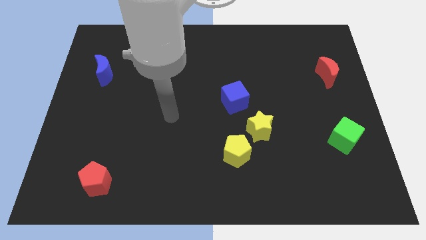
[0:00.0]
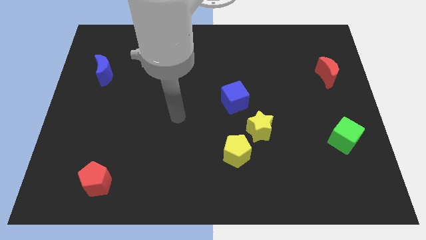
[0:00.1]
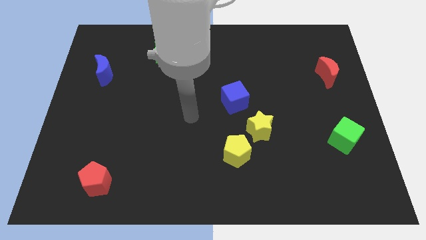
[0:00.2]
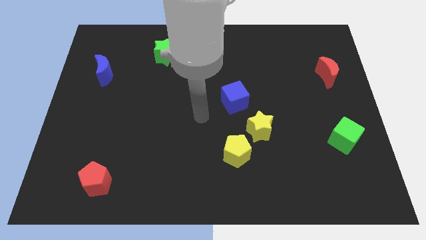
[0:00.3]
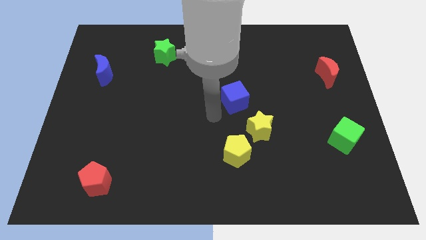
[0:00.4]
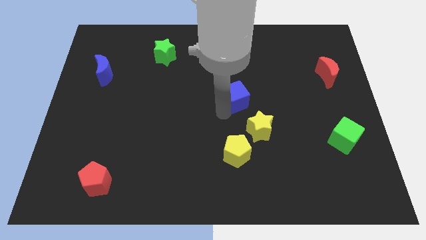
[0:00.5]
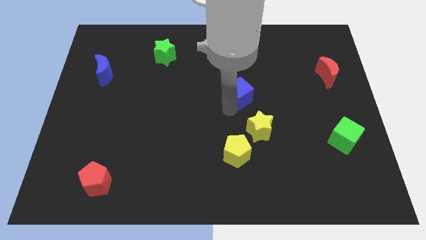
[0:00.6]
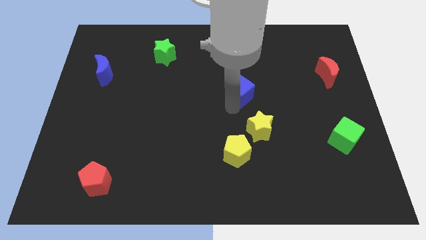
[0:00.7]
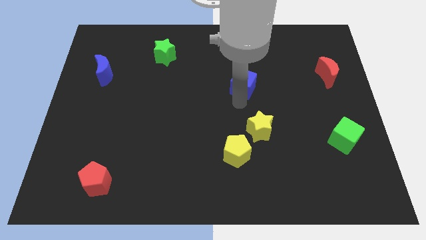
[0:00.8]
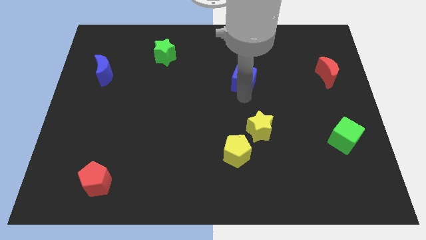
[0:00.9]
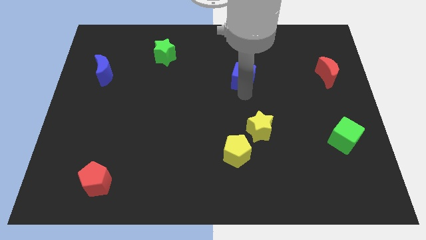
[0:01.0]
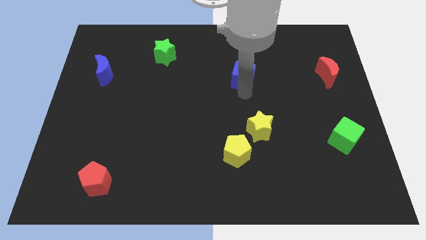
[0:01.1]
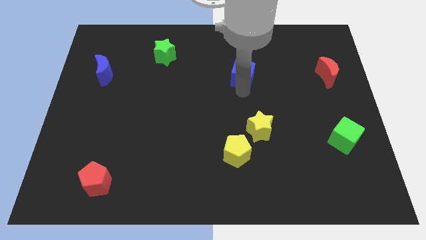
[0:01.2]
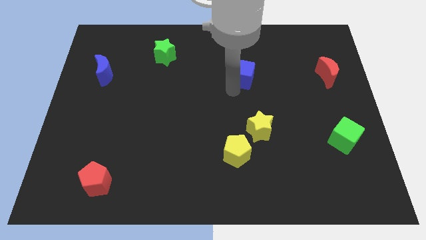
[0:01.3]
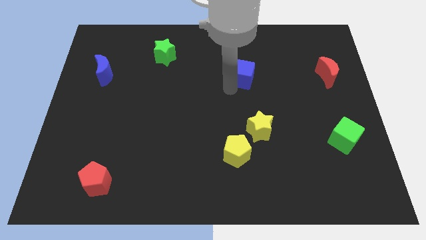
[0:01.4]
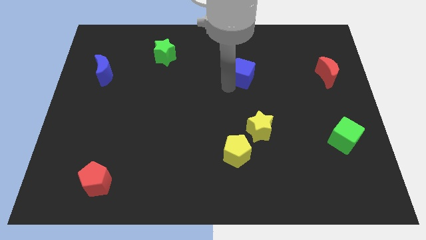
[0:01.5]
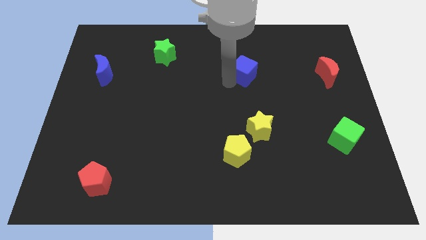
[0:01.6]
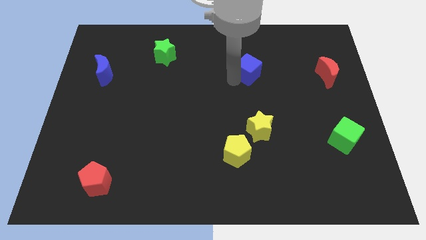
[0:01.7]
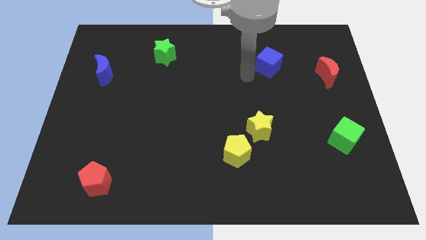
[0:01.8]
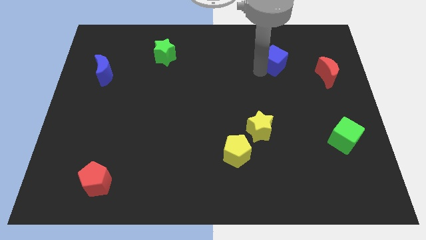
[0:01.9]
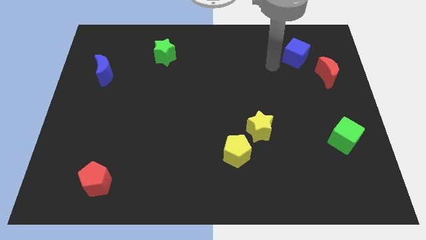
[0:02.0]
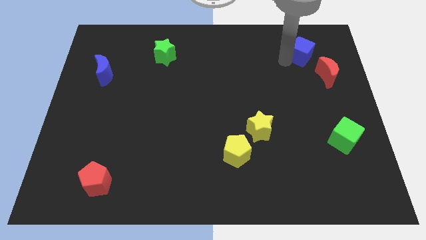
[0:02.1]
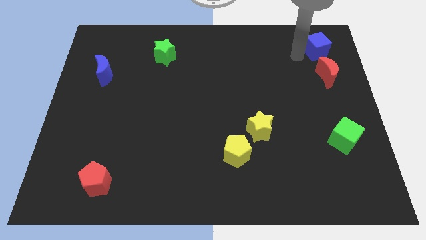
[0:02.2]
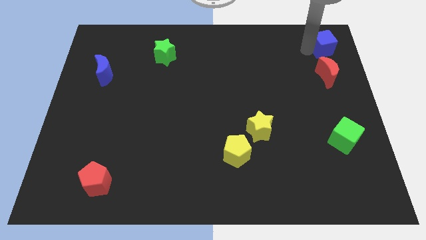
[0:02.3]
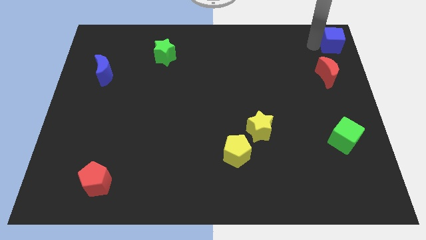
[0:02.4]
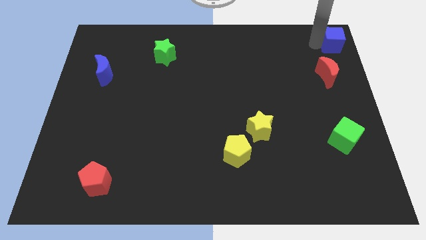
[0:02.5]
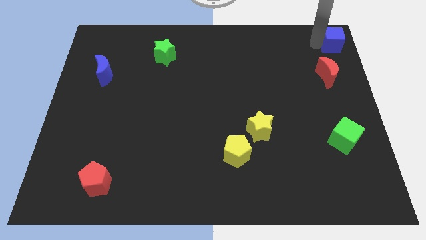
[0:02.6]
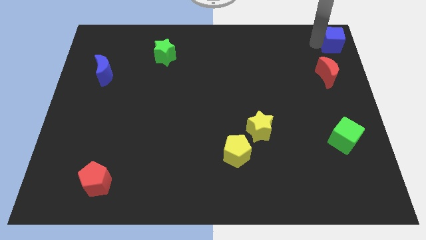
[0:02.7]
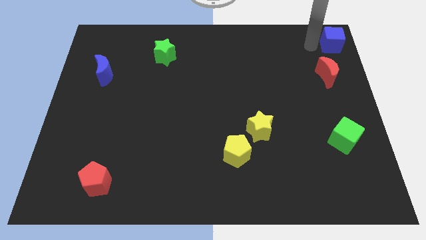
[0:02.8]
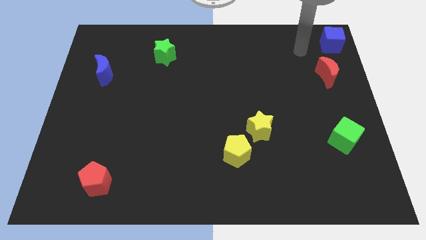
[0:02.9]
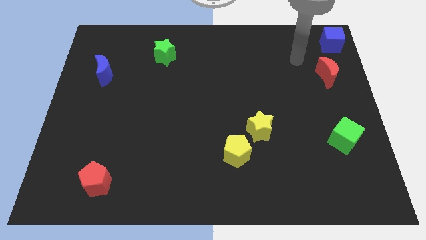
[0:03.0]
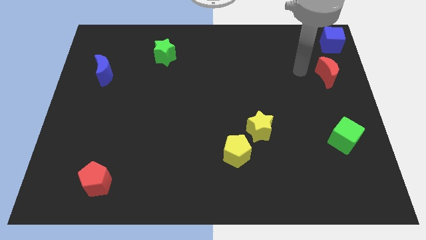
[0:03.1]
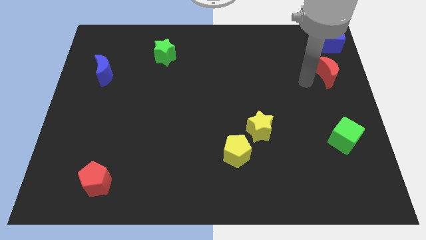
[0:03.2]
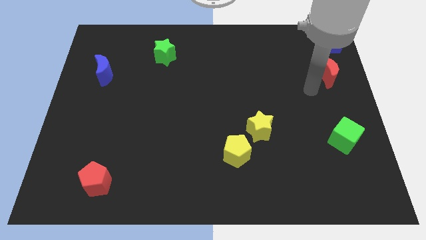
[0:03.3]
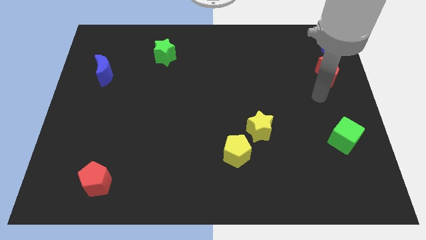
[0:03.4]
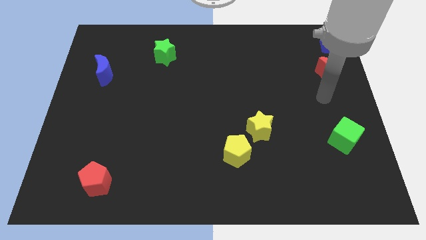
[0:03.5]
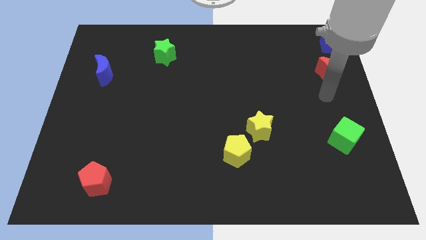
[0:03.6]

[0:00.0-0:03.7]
drag the blue cube to the top right

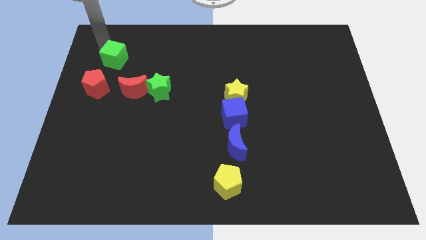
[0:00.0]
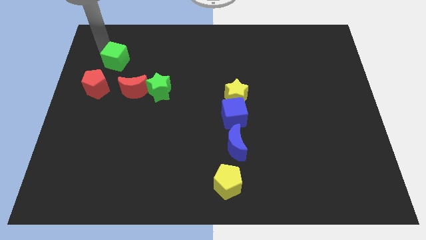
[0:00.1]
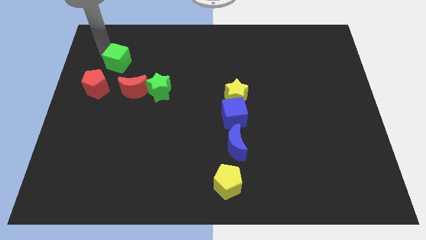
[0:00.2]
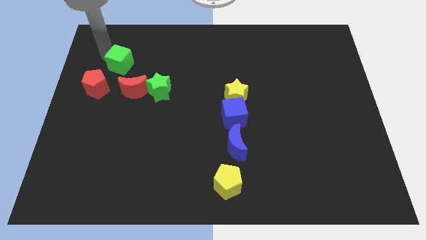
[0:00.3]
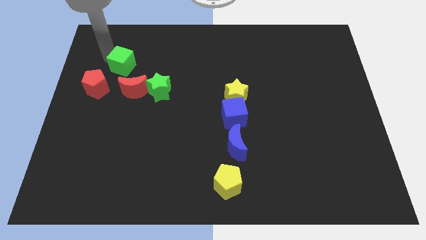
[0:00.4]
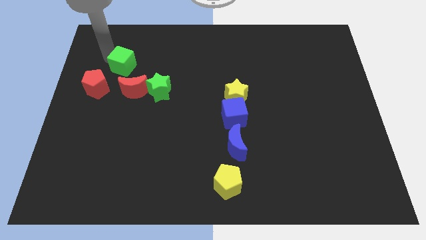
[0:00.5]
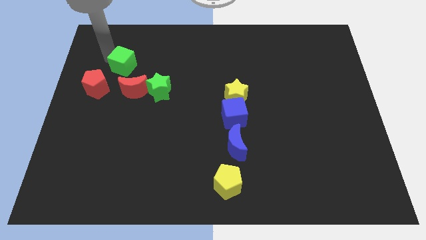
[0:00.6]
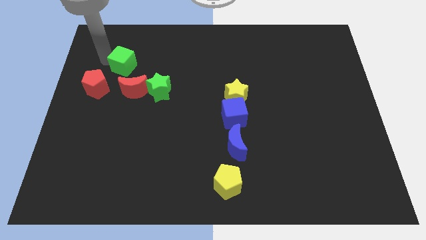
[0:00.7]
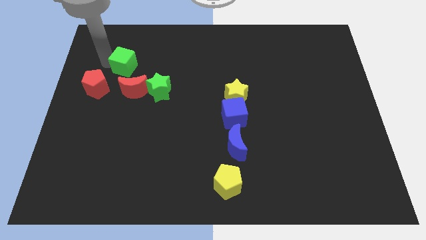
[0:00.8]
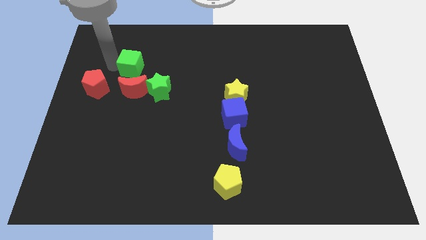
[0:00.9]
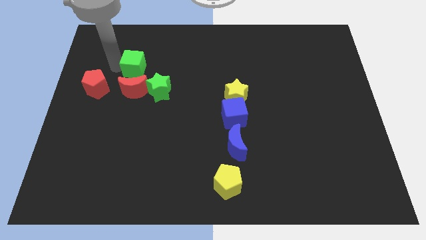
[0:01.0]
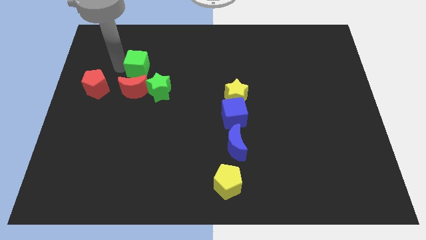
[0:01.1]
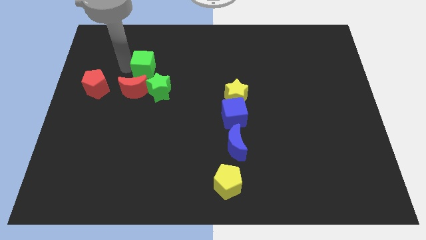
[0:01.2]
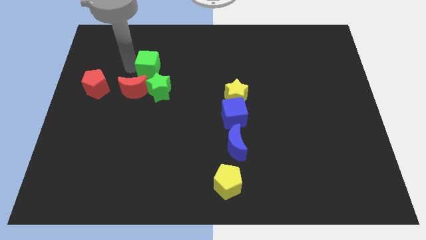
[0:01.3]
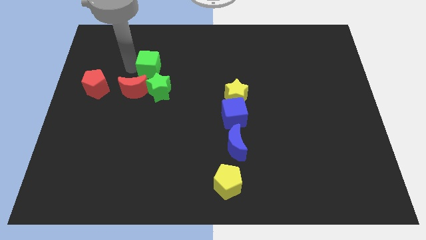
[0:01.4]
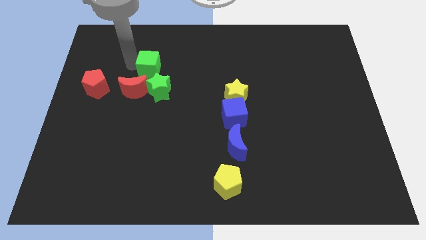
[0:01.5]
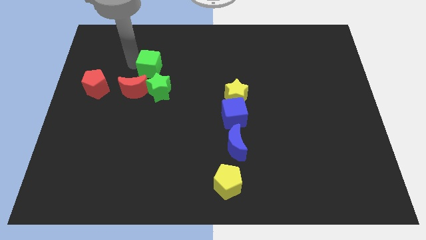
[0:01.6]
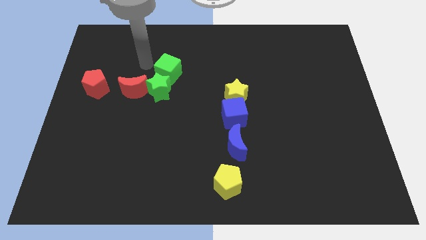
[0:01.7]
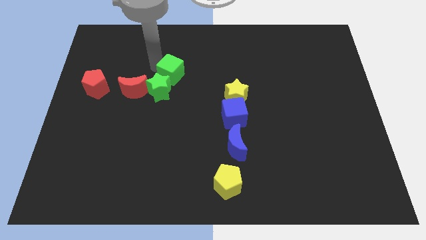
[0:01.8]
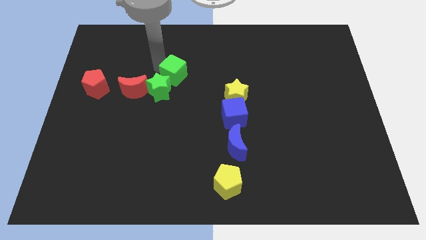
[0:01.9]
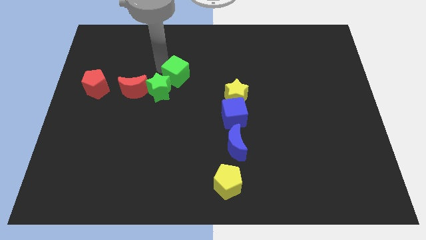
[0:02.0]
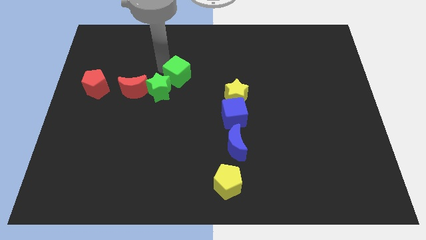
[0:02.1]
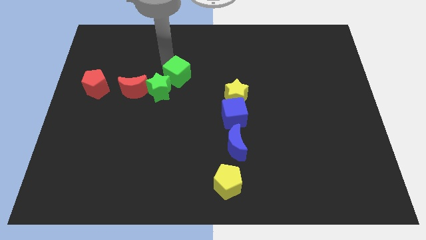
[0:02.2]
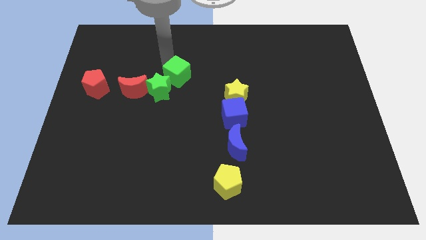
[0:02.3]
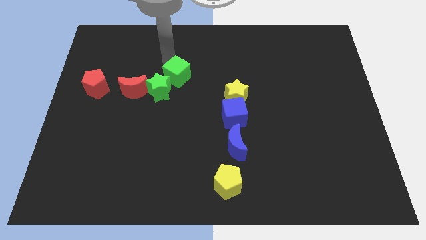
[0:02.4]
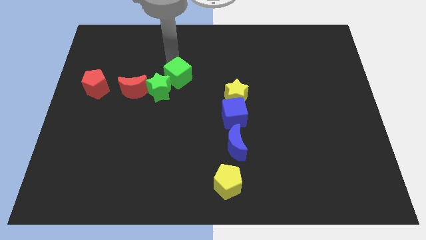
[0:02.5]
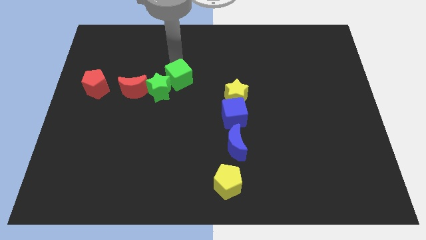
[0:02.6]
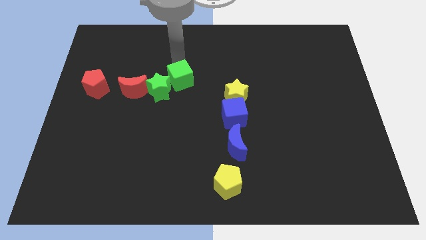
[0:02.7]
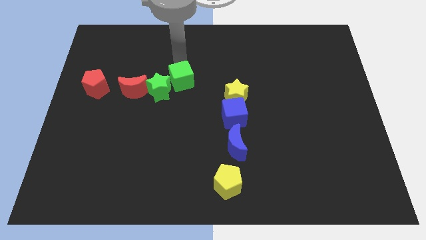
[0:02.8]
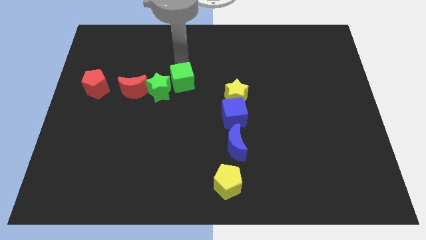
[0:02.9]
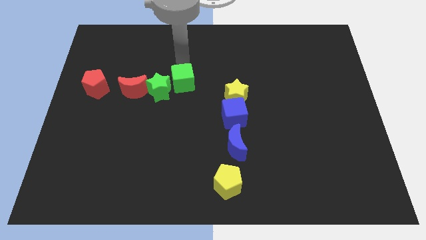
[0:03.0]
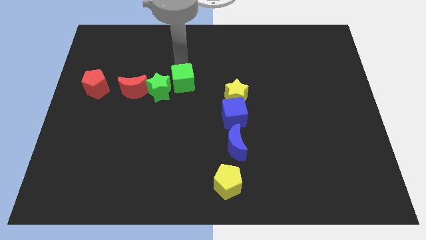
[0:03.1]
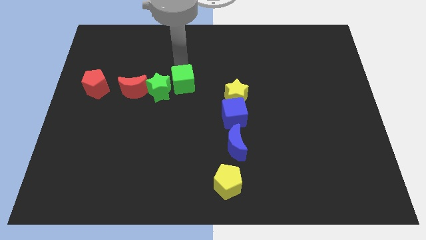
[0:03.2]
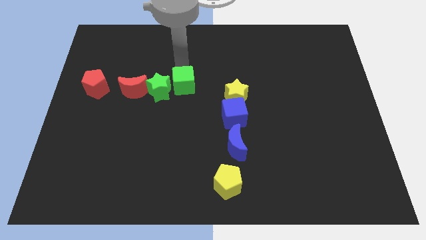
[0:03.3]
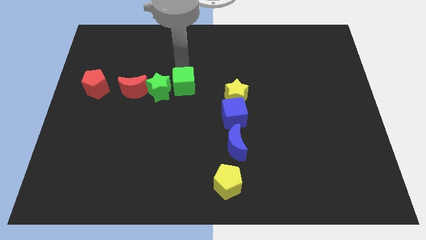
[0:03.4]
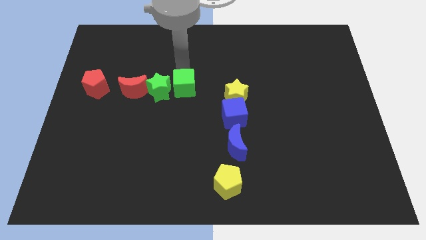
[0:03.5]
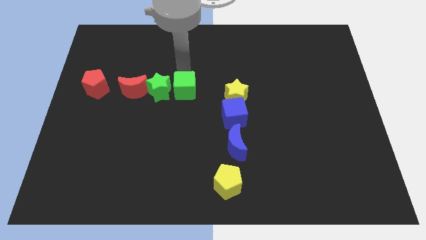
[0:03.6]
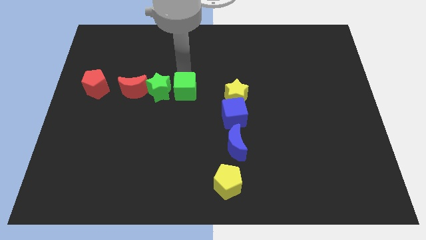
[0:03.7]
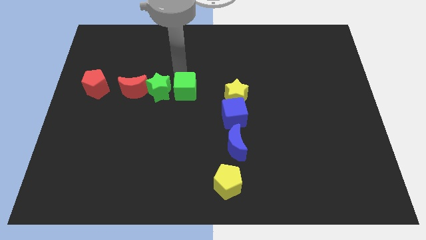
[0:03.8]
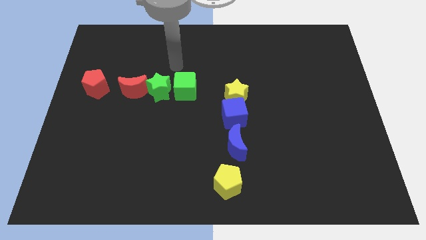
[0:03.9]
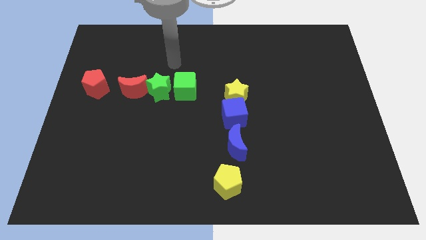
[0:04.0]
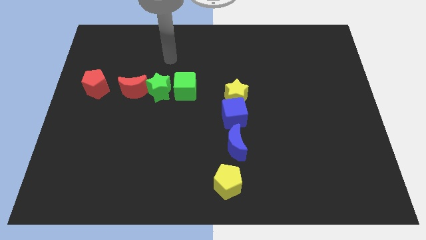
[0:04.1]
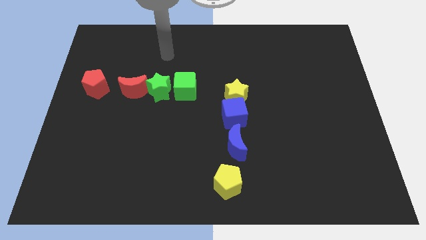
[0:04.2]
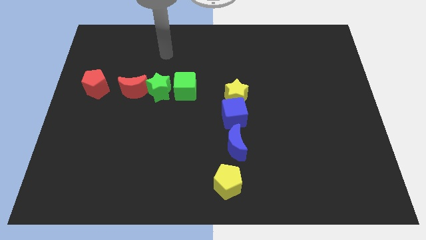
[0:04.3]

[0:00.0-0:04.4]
place the green cube right to the green star

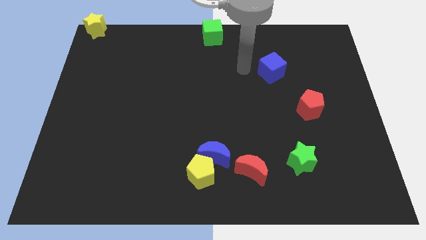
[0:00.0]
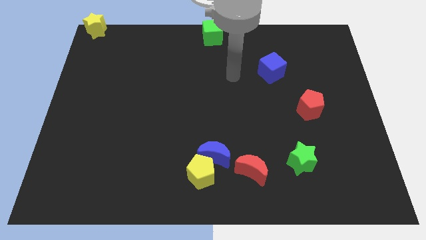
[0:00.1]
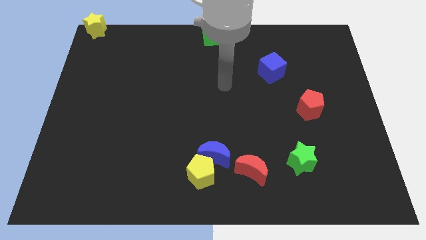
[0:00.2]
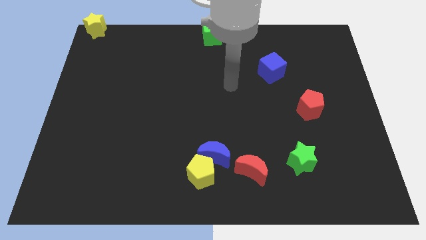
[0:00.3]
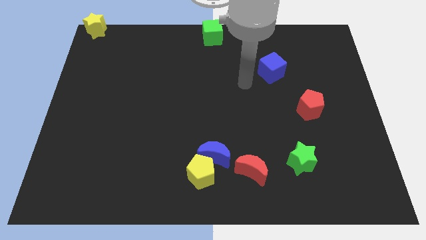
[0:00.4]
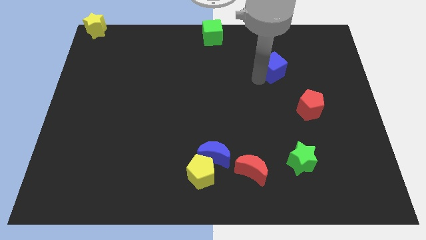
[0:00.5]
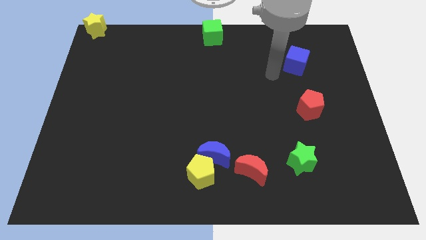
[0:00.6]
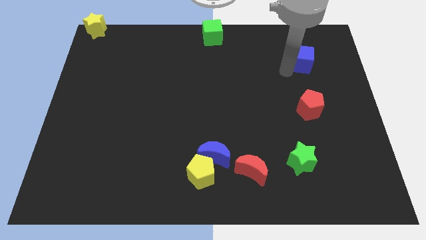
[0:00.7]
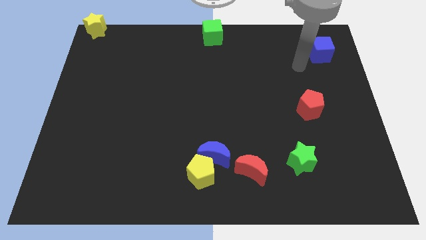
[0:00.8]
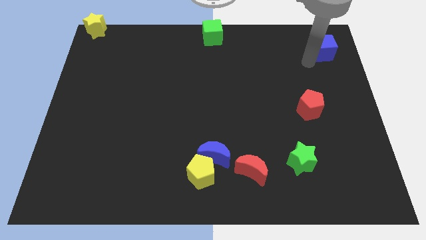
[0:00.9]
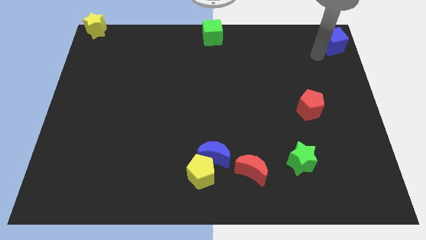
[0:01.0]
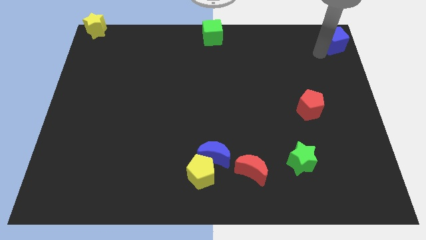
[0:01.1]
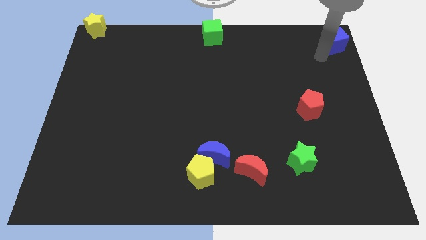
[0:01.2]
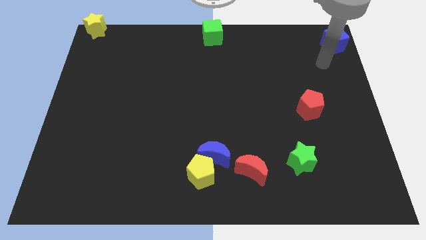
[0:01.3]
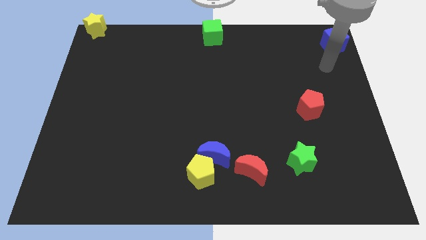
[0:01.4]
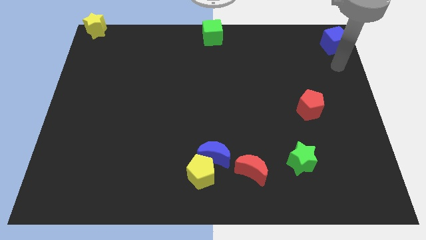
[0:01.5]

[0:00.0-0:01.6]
place blue cube to the top right corner of the board
